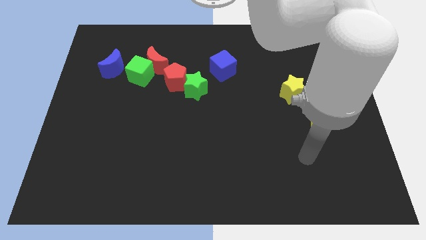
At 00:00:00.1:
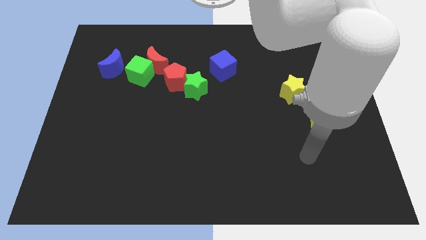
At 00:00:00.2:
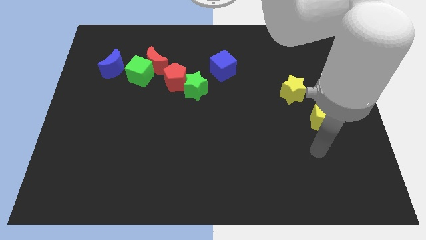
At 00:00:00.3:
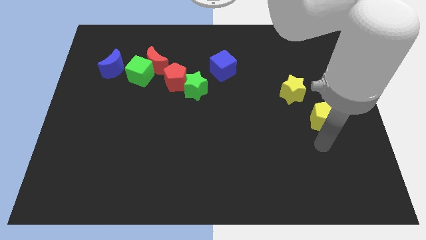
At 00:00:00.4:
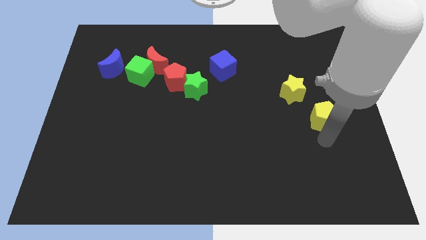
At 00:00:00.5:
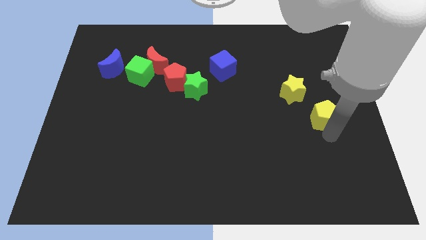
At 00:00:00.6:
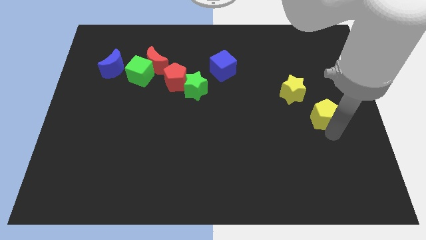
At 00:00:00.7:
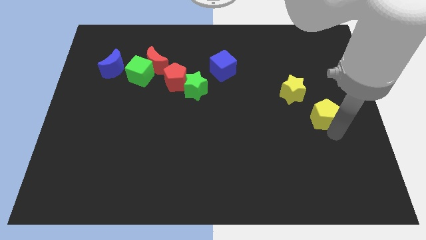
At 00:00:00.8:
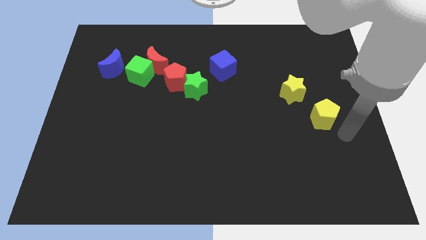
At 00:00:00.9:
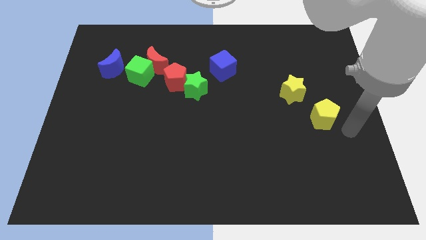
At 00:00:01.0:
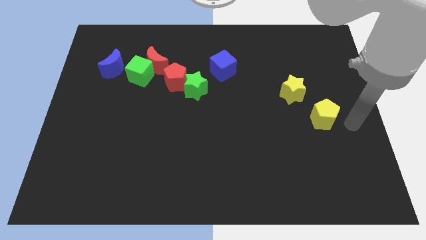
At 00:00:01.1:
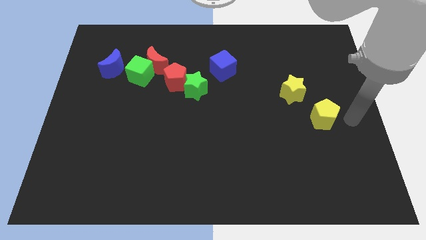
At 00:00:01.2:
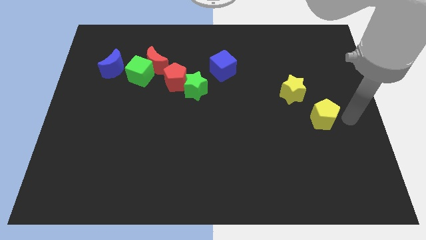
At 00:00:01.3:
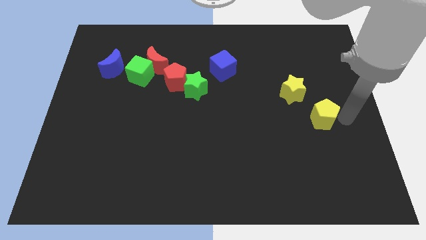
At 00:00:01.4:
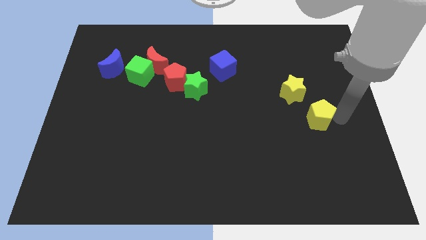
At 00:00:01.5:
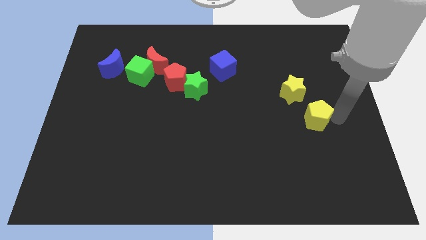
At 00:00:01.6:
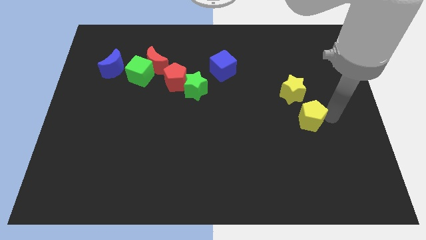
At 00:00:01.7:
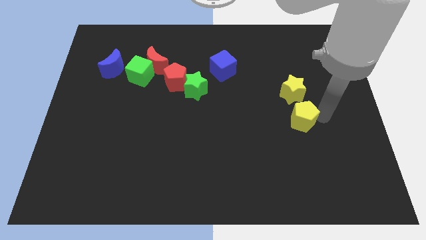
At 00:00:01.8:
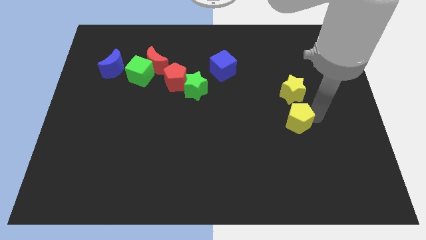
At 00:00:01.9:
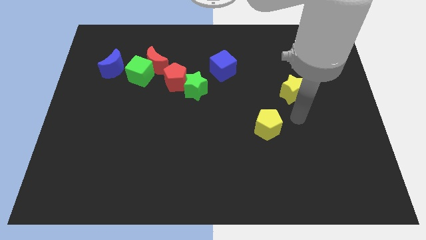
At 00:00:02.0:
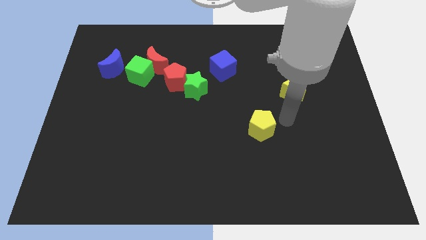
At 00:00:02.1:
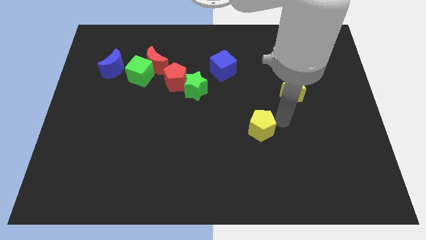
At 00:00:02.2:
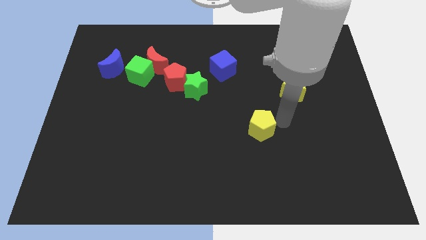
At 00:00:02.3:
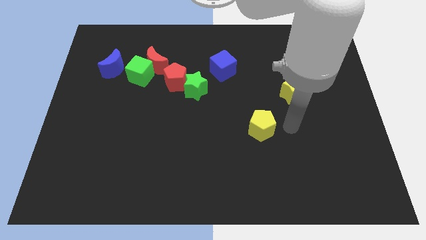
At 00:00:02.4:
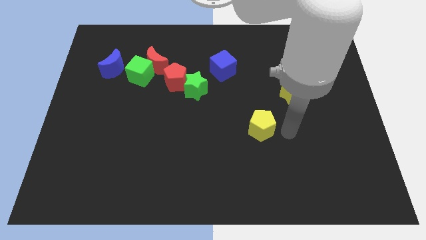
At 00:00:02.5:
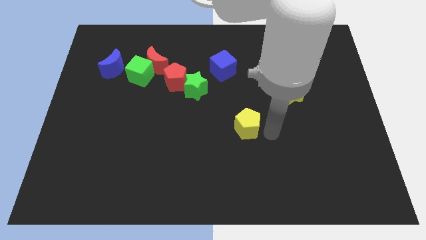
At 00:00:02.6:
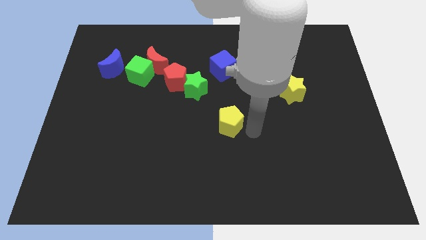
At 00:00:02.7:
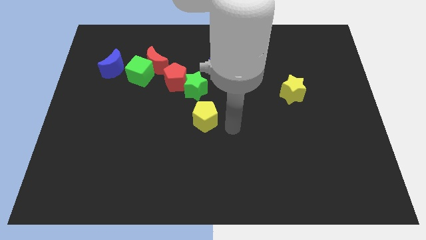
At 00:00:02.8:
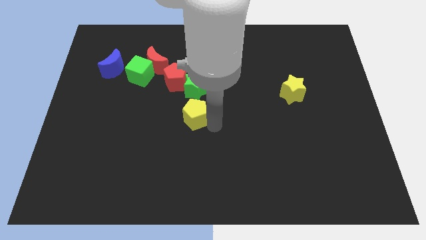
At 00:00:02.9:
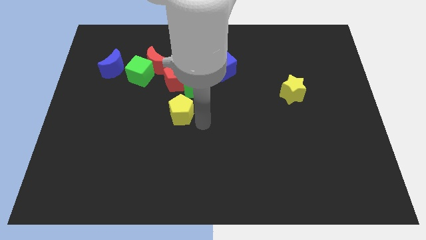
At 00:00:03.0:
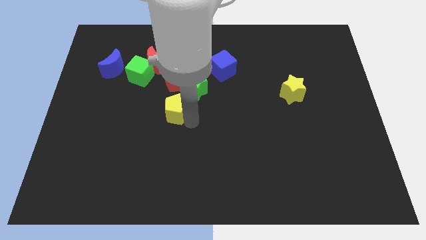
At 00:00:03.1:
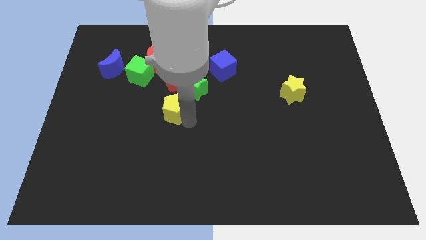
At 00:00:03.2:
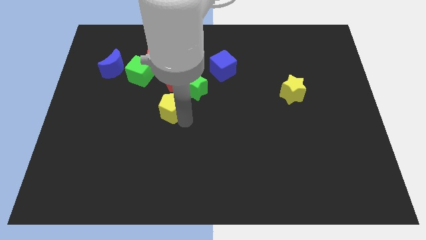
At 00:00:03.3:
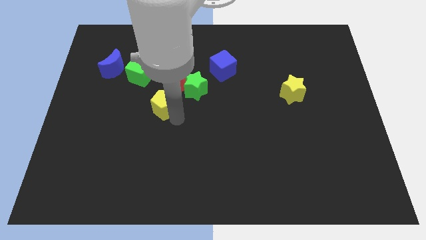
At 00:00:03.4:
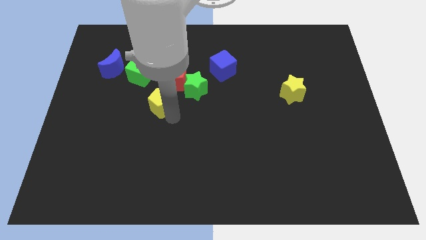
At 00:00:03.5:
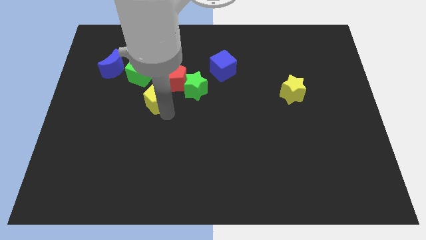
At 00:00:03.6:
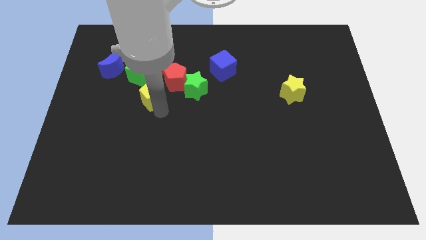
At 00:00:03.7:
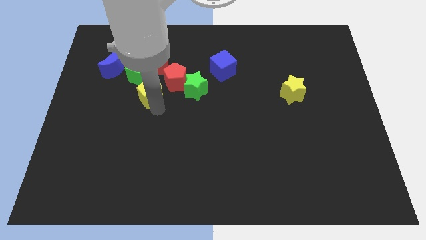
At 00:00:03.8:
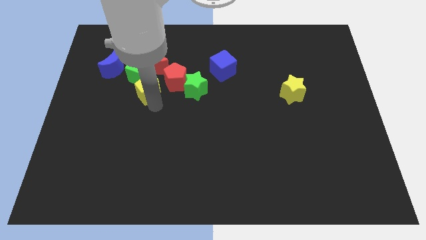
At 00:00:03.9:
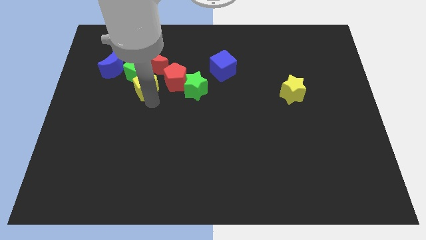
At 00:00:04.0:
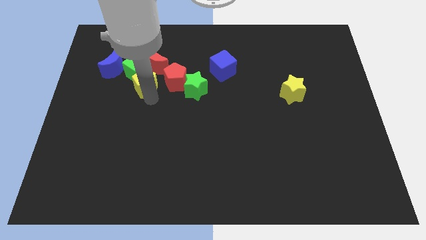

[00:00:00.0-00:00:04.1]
push the yellow pentagon close to the green cube

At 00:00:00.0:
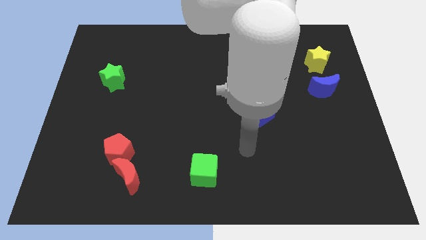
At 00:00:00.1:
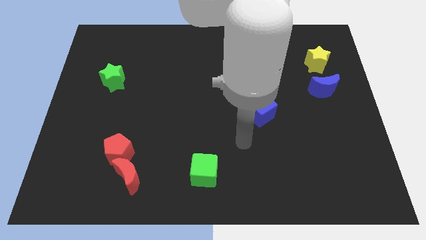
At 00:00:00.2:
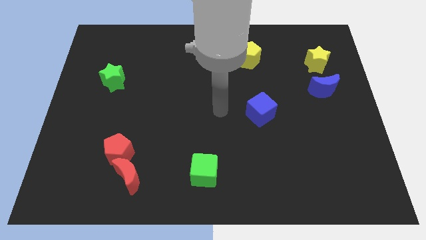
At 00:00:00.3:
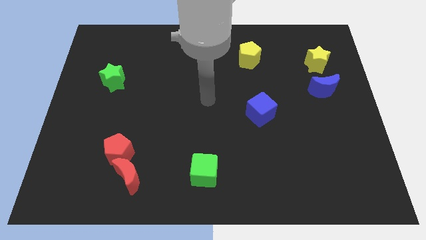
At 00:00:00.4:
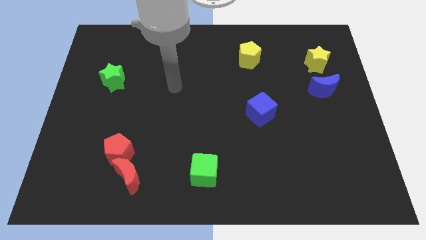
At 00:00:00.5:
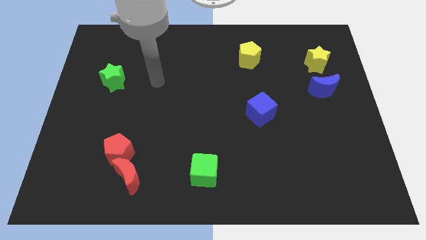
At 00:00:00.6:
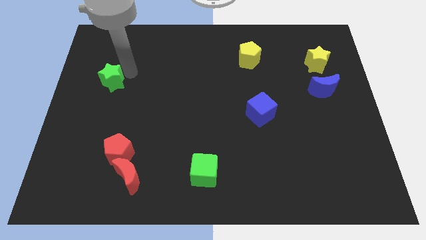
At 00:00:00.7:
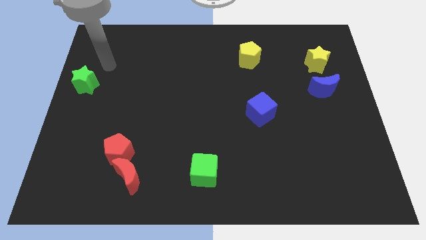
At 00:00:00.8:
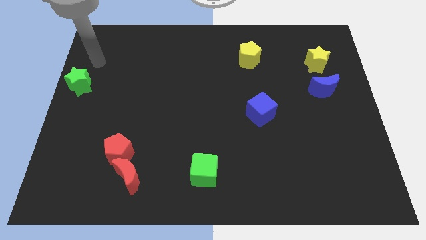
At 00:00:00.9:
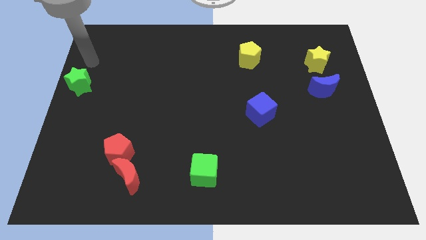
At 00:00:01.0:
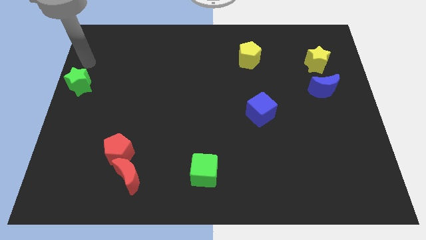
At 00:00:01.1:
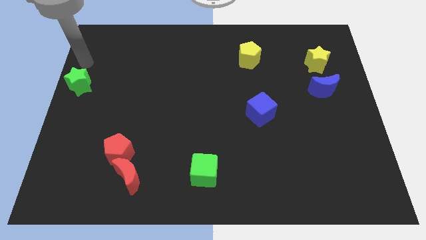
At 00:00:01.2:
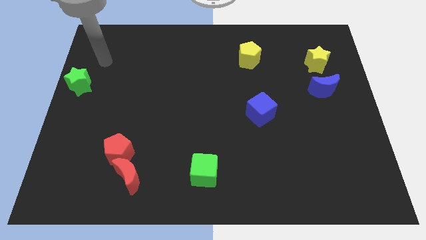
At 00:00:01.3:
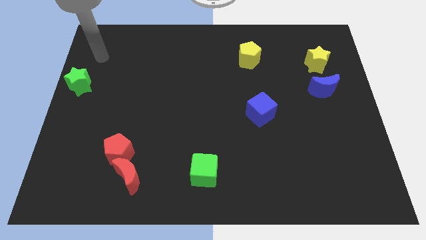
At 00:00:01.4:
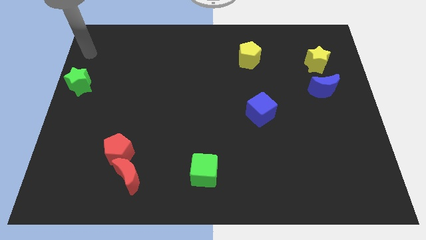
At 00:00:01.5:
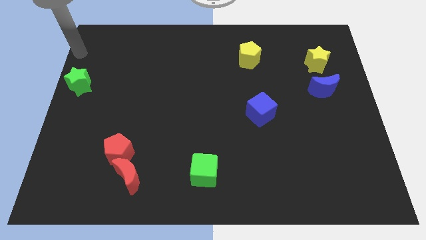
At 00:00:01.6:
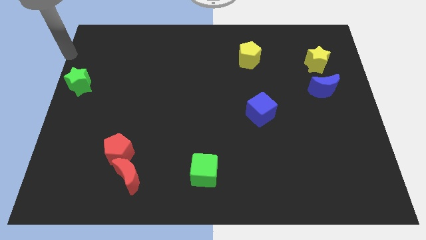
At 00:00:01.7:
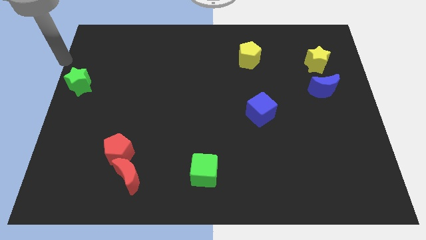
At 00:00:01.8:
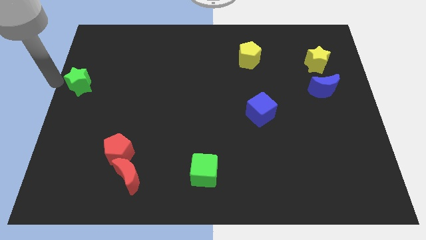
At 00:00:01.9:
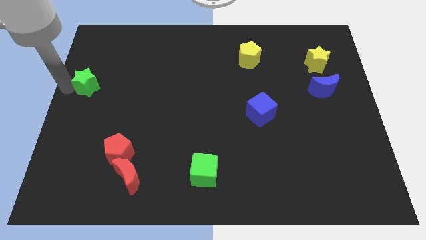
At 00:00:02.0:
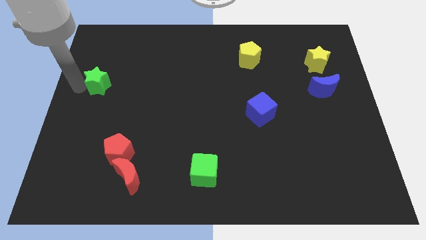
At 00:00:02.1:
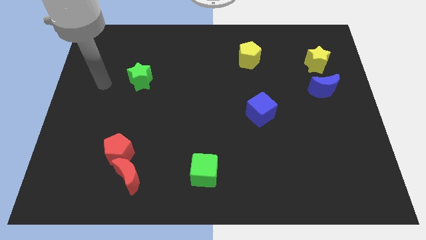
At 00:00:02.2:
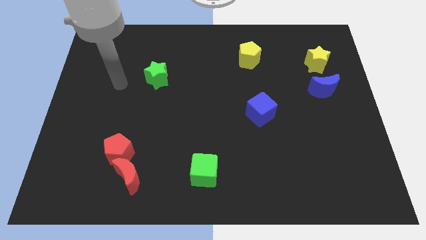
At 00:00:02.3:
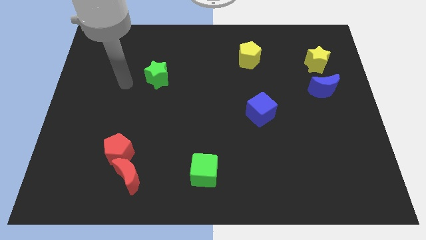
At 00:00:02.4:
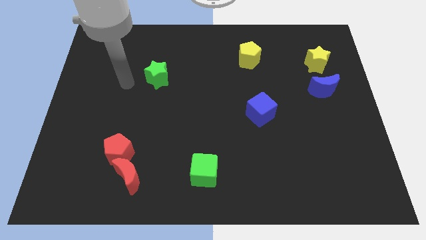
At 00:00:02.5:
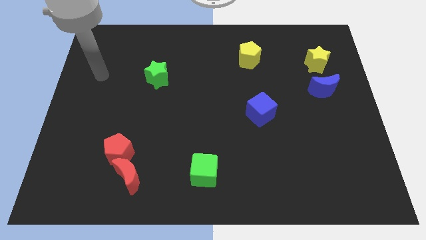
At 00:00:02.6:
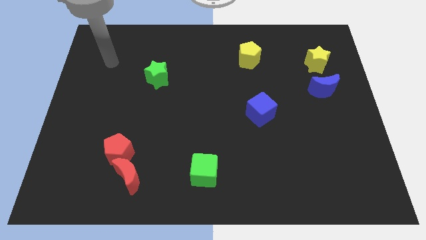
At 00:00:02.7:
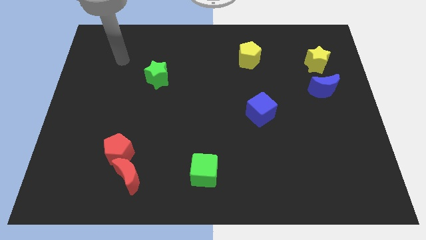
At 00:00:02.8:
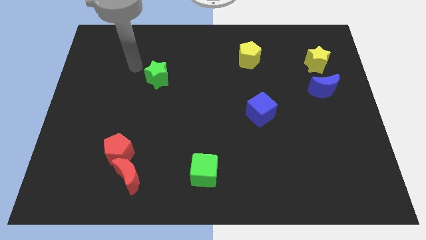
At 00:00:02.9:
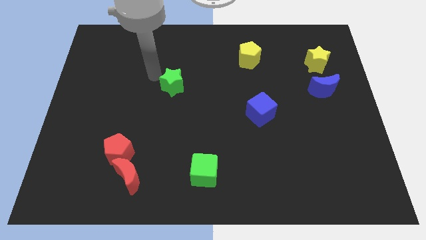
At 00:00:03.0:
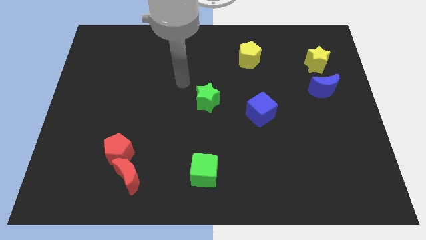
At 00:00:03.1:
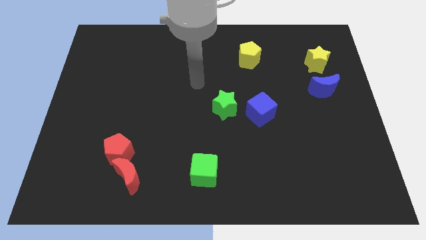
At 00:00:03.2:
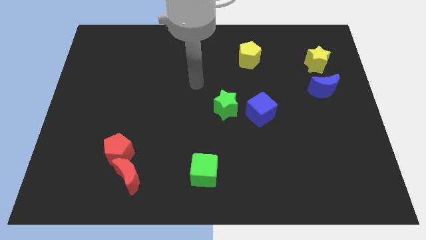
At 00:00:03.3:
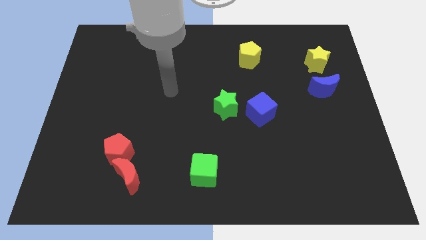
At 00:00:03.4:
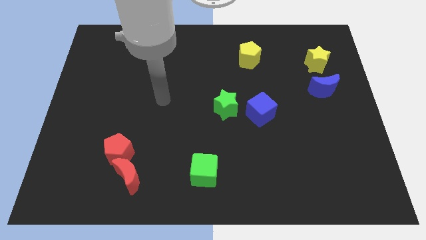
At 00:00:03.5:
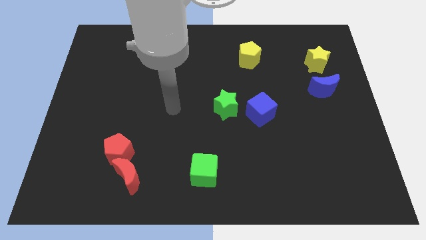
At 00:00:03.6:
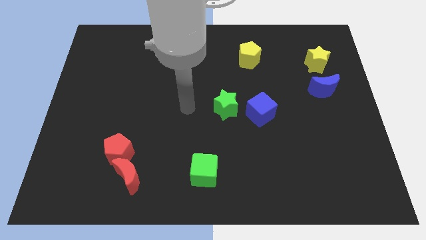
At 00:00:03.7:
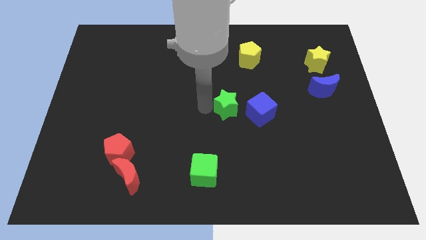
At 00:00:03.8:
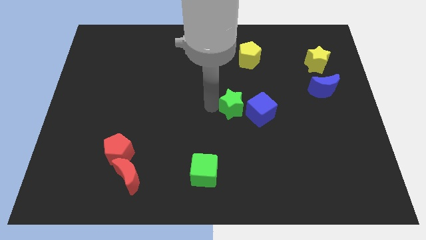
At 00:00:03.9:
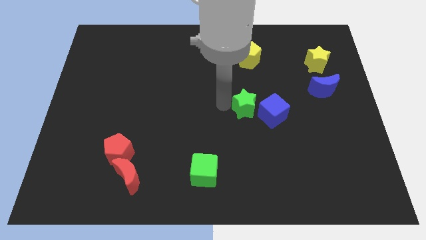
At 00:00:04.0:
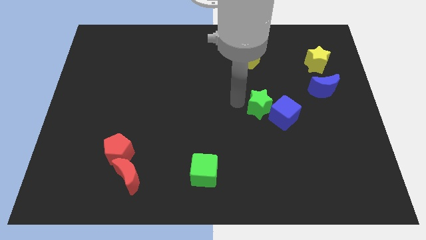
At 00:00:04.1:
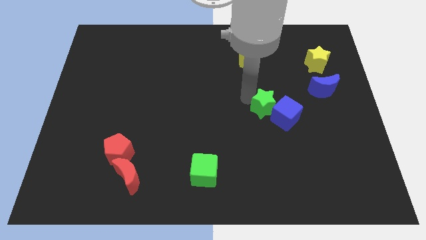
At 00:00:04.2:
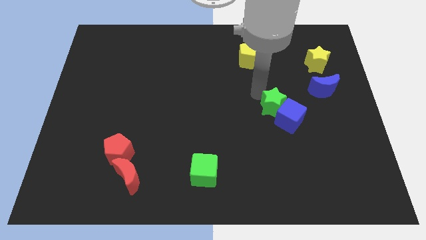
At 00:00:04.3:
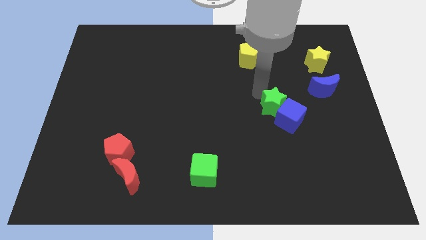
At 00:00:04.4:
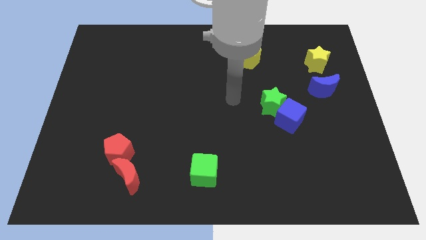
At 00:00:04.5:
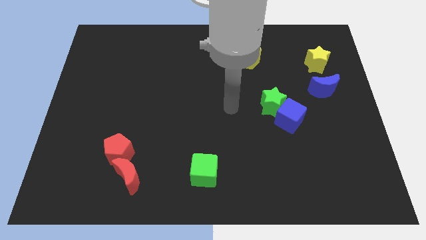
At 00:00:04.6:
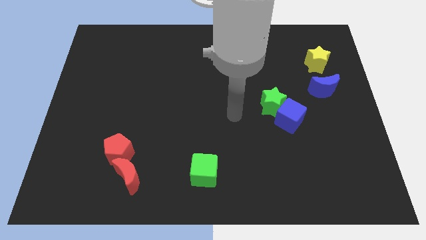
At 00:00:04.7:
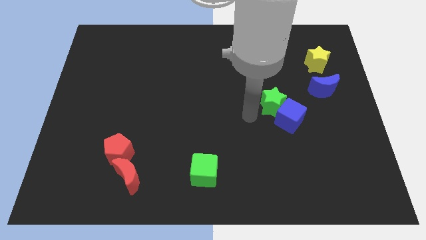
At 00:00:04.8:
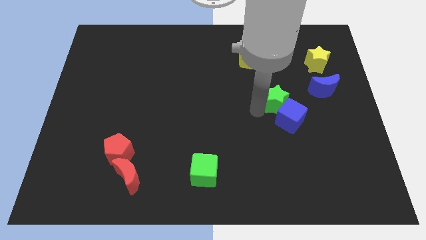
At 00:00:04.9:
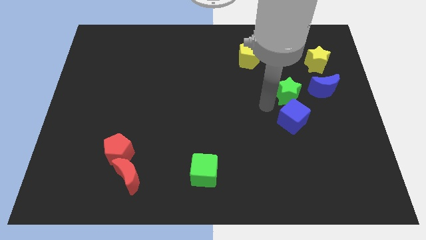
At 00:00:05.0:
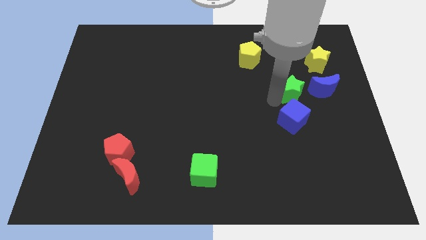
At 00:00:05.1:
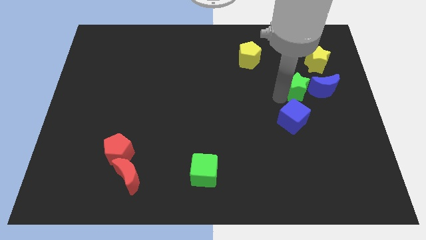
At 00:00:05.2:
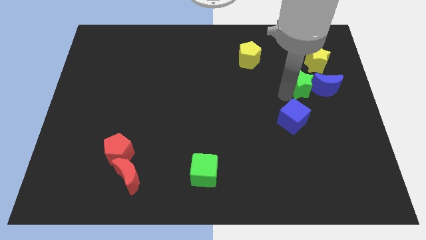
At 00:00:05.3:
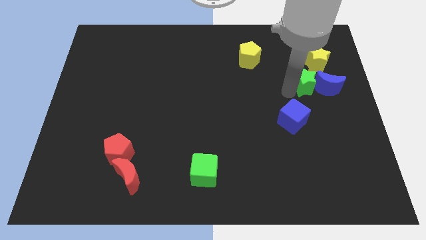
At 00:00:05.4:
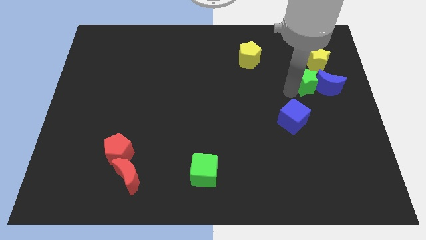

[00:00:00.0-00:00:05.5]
push the green star to the blue moon
